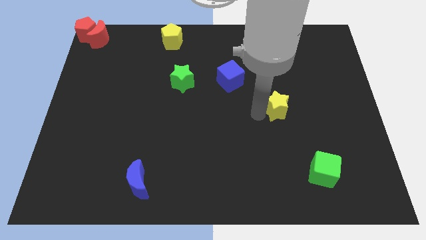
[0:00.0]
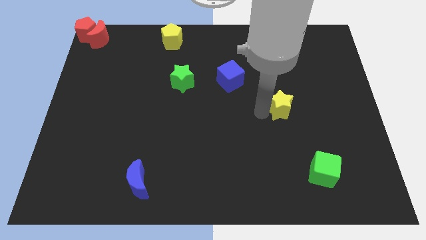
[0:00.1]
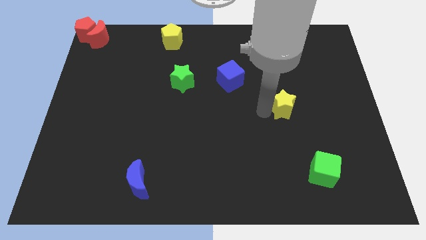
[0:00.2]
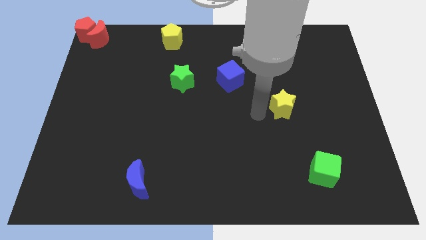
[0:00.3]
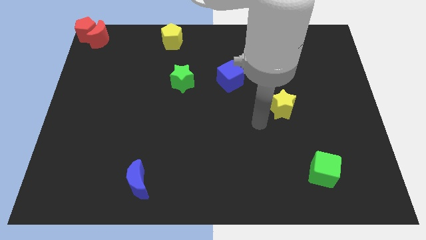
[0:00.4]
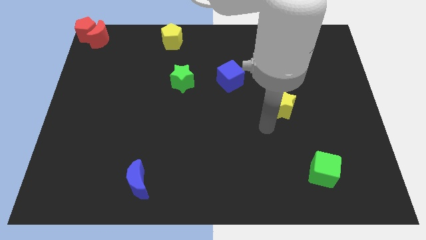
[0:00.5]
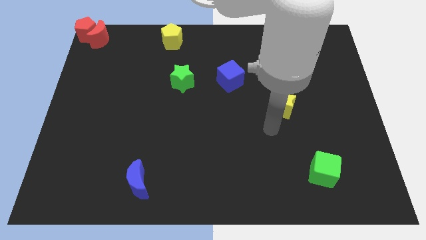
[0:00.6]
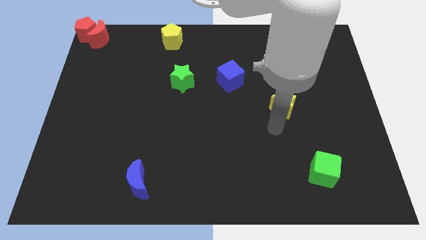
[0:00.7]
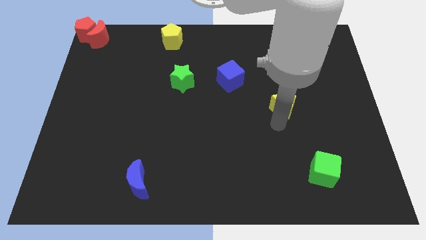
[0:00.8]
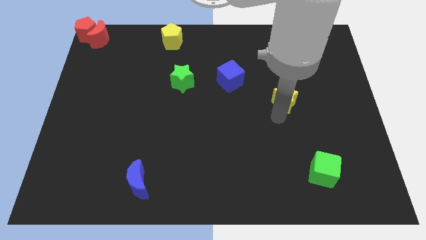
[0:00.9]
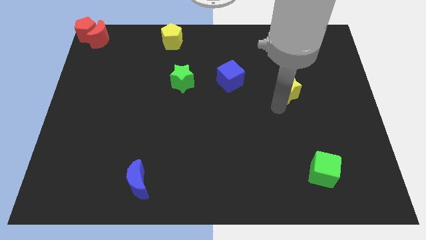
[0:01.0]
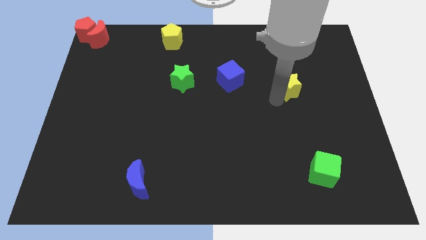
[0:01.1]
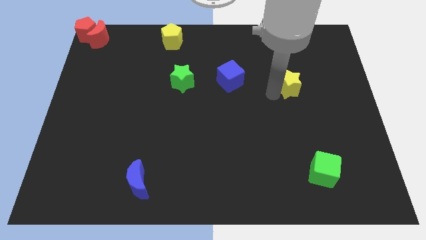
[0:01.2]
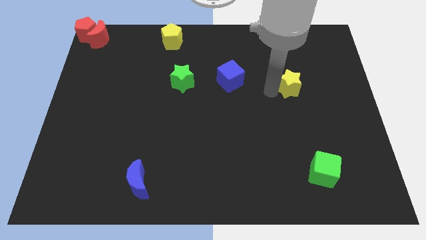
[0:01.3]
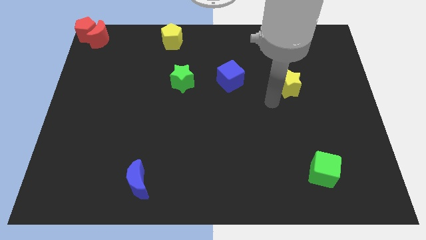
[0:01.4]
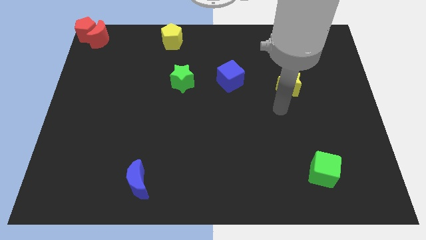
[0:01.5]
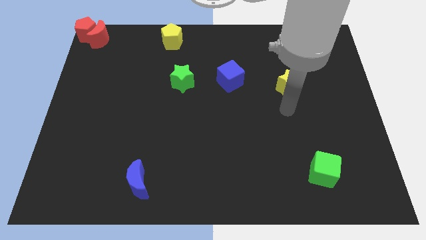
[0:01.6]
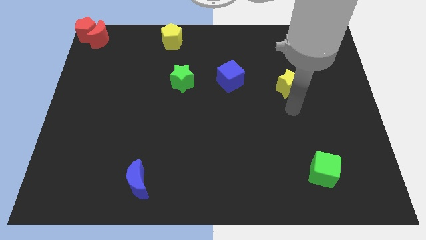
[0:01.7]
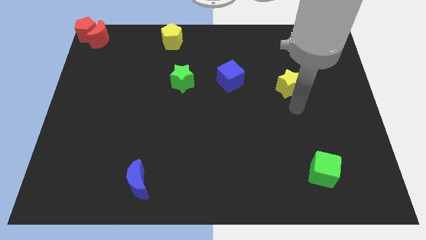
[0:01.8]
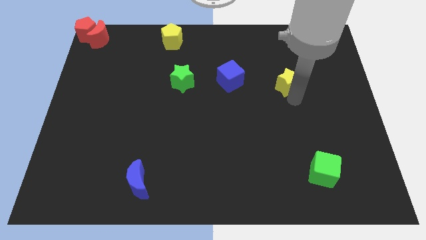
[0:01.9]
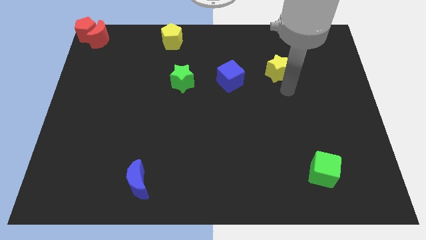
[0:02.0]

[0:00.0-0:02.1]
push the yellow star right to the blue cube

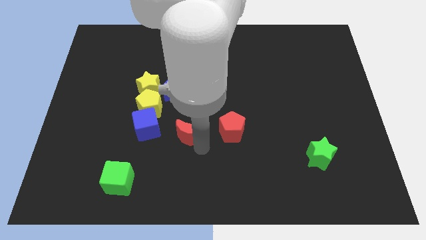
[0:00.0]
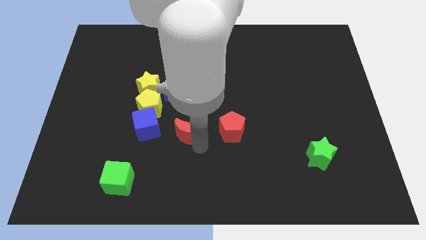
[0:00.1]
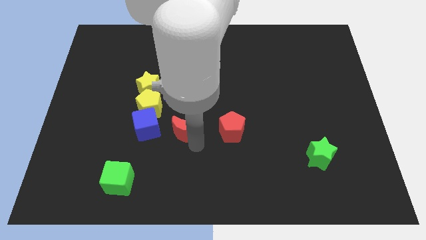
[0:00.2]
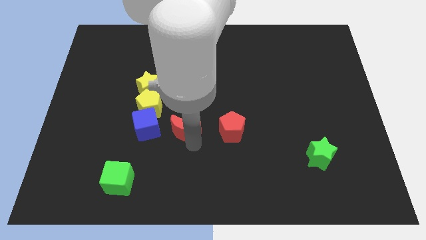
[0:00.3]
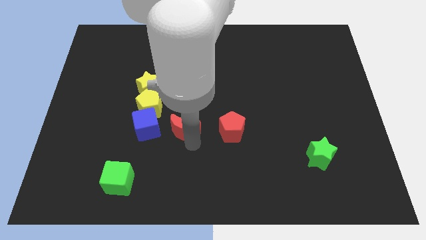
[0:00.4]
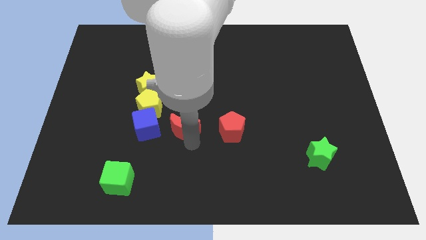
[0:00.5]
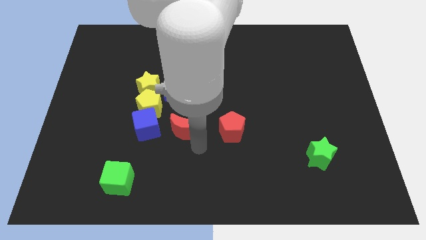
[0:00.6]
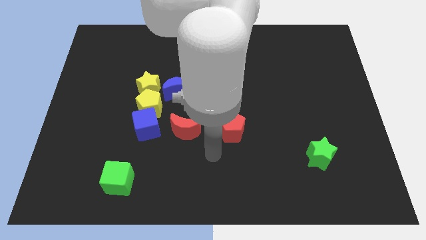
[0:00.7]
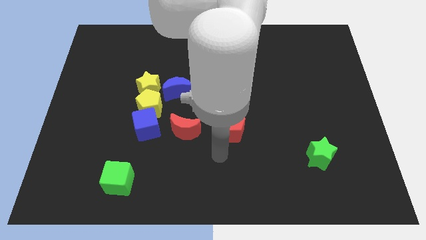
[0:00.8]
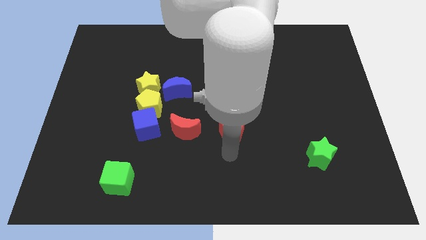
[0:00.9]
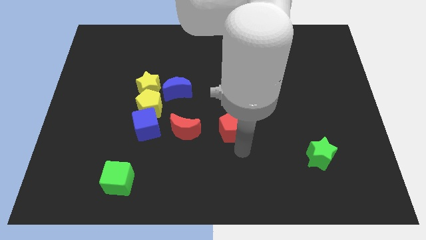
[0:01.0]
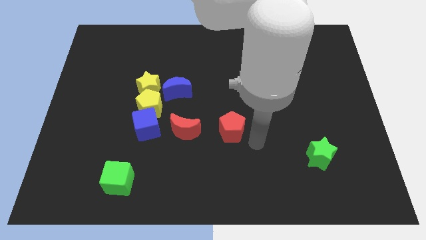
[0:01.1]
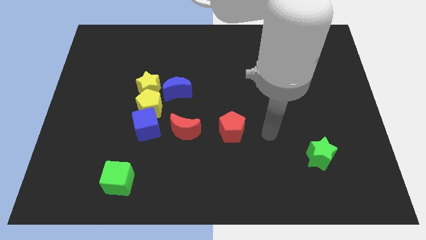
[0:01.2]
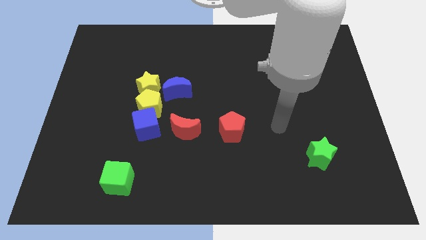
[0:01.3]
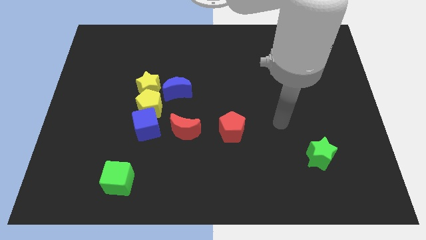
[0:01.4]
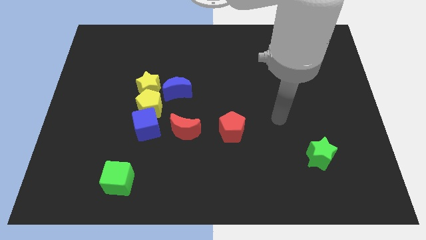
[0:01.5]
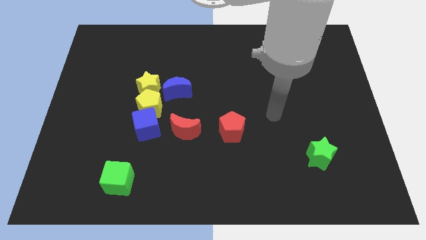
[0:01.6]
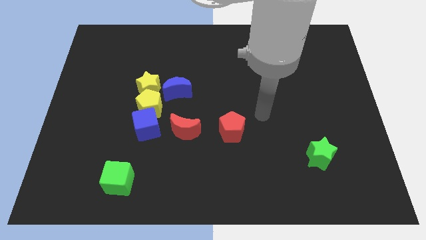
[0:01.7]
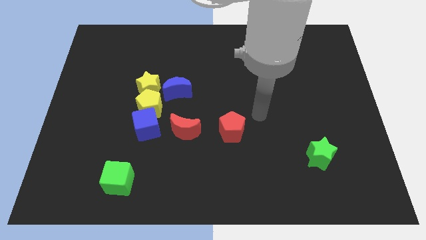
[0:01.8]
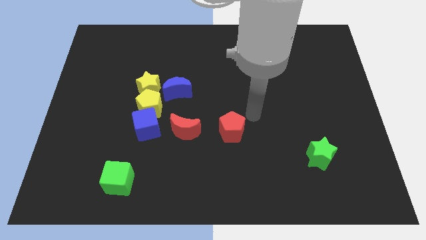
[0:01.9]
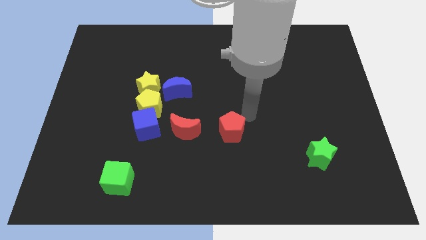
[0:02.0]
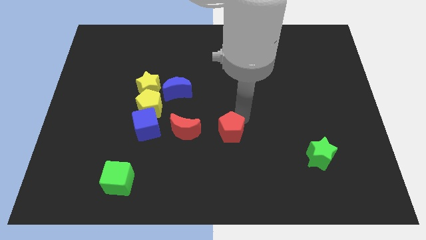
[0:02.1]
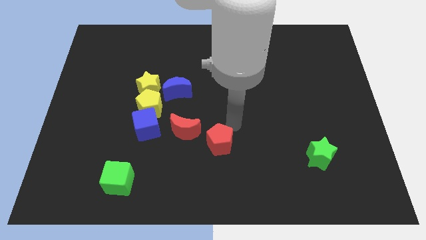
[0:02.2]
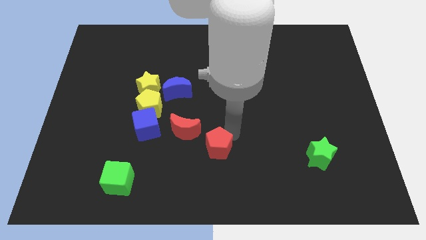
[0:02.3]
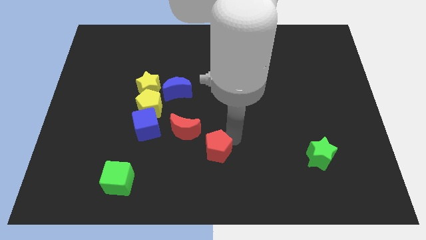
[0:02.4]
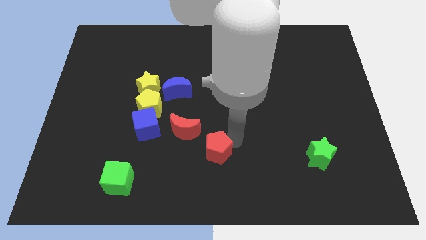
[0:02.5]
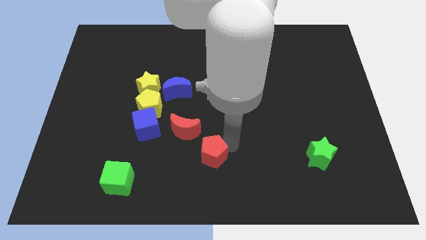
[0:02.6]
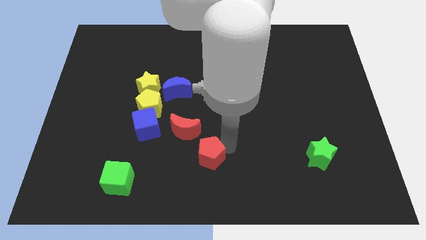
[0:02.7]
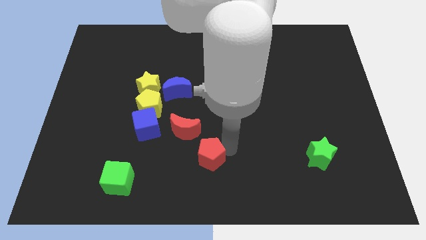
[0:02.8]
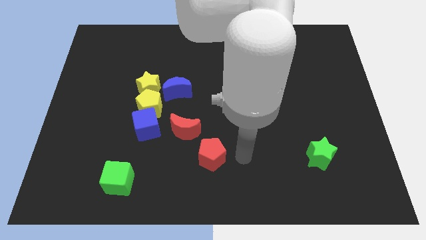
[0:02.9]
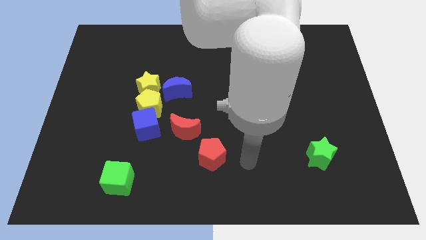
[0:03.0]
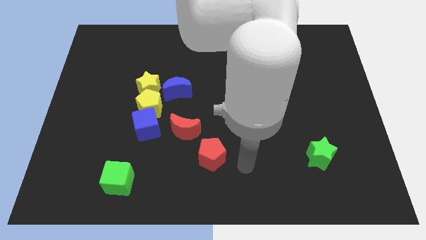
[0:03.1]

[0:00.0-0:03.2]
move the red pentagon towards bottom

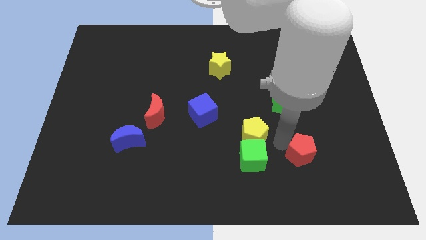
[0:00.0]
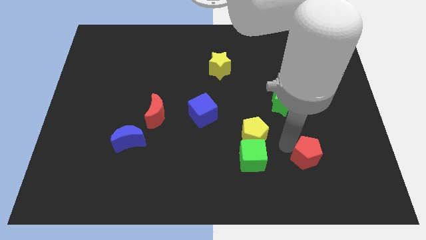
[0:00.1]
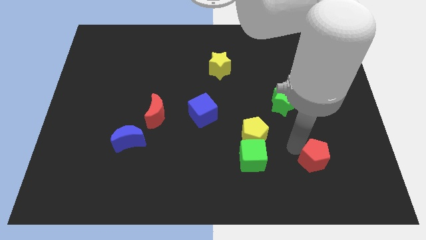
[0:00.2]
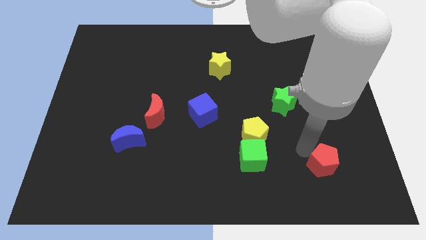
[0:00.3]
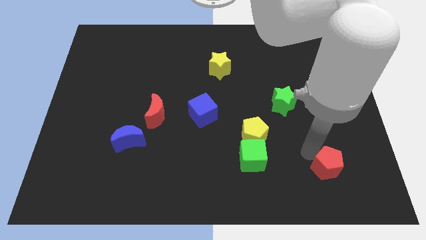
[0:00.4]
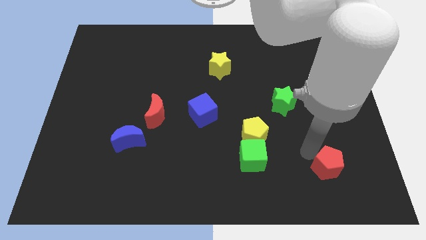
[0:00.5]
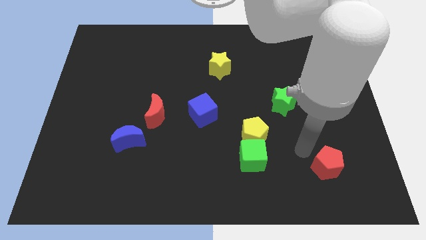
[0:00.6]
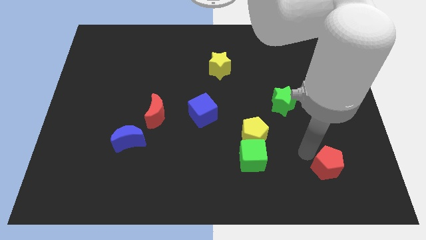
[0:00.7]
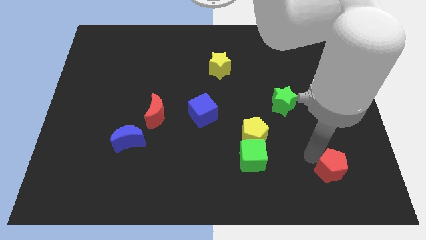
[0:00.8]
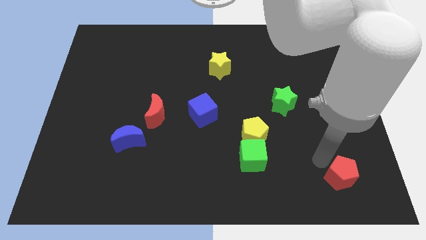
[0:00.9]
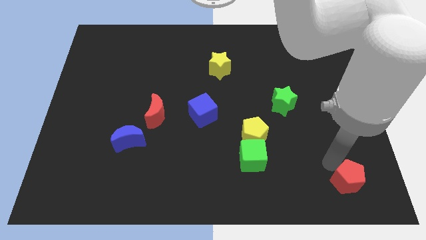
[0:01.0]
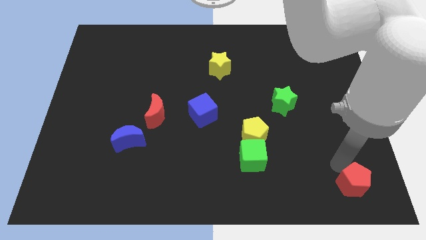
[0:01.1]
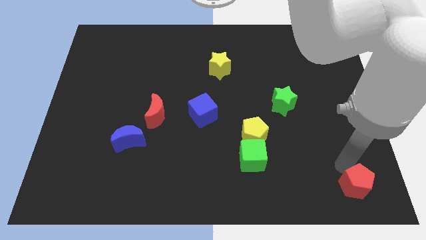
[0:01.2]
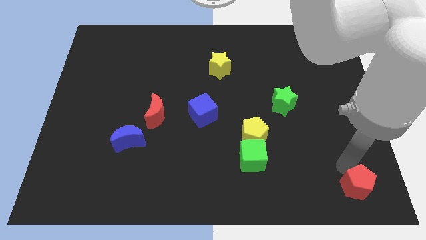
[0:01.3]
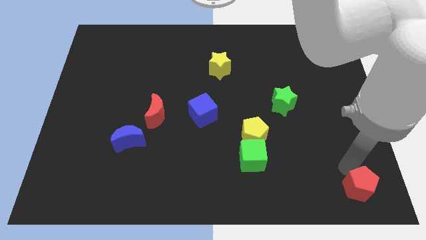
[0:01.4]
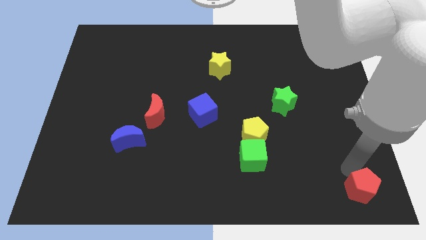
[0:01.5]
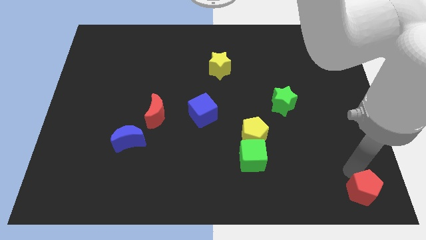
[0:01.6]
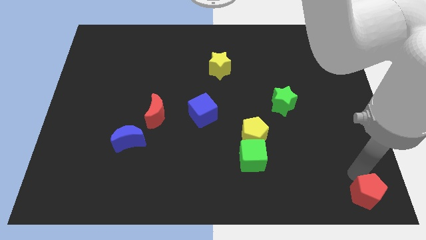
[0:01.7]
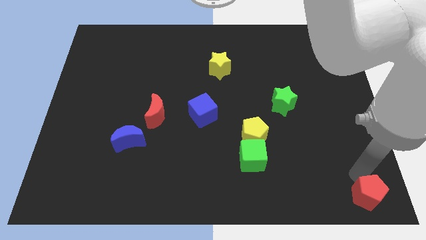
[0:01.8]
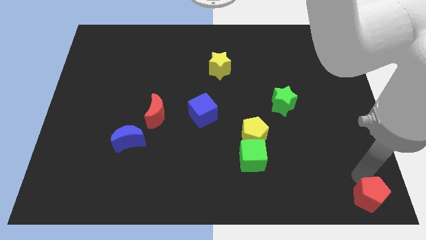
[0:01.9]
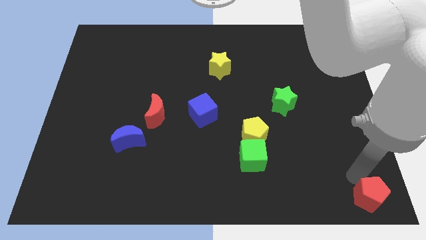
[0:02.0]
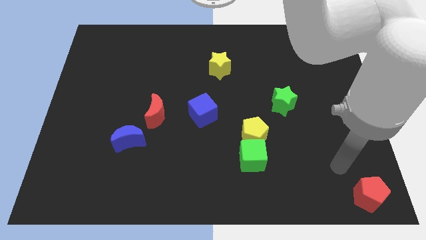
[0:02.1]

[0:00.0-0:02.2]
push red pentagon to the bottom right

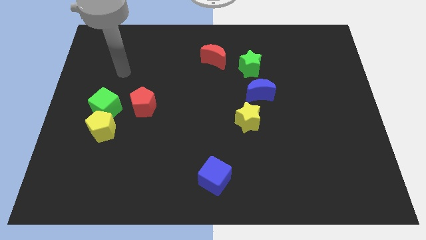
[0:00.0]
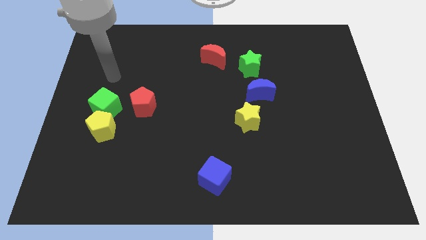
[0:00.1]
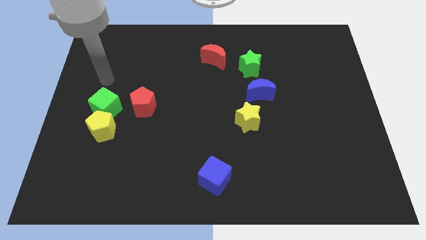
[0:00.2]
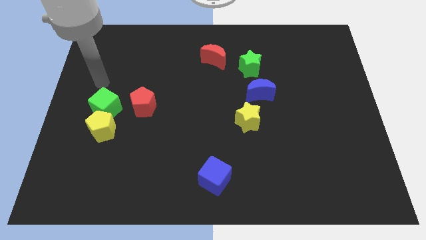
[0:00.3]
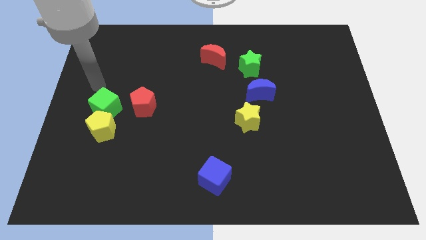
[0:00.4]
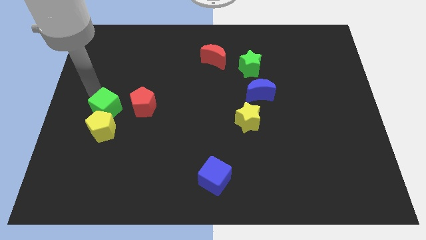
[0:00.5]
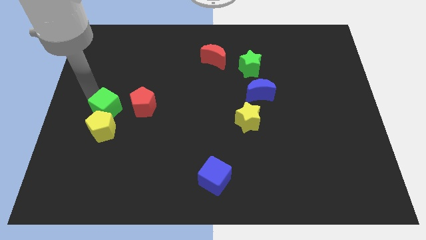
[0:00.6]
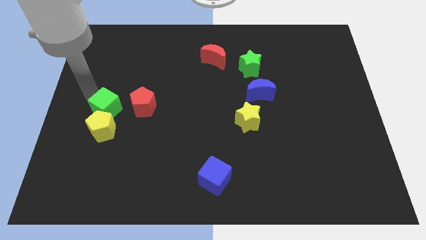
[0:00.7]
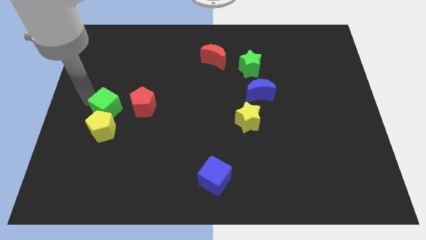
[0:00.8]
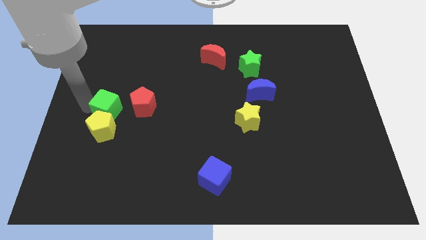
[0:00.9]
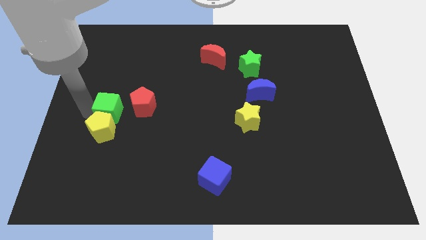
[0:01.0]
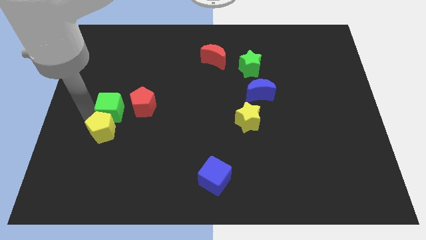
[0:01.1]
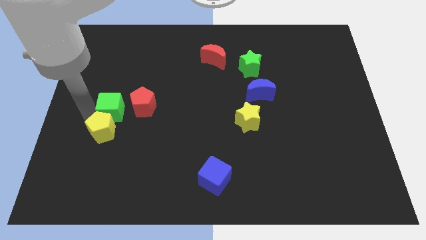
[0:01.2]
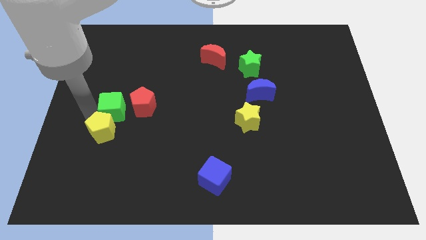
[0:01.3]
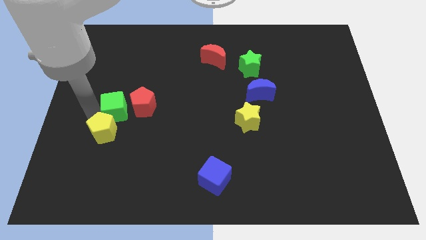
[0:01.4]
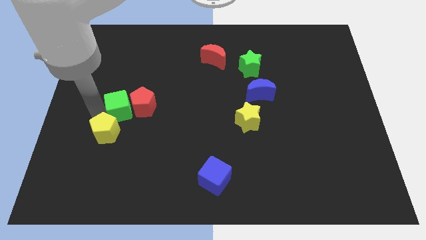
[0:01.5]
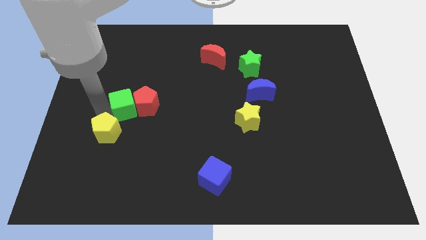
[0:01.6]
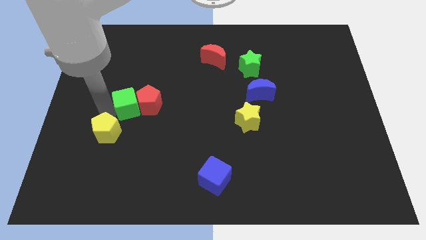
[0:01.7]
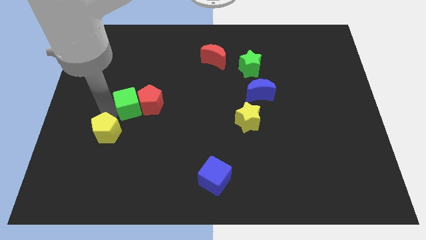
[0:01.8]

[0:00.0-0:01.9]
push the green cube into the red pentagon
